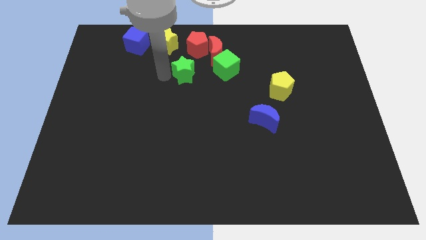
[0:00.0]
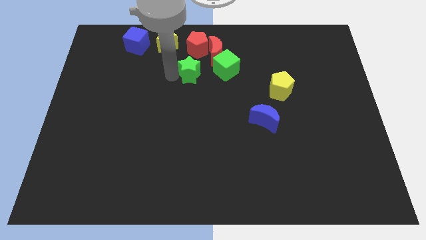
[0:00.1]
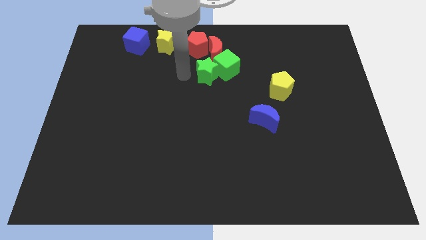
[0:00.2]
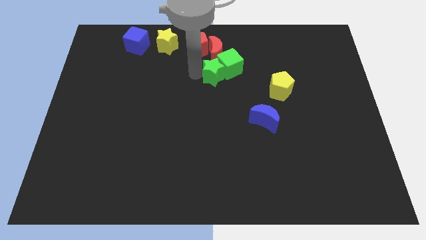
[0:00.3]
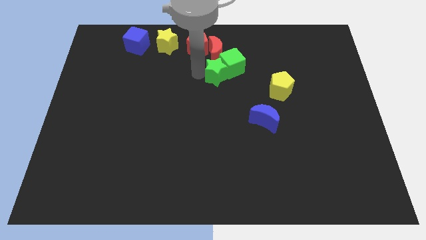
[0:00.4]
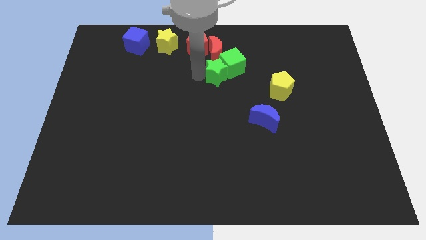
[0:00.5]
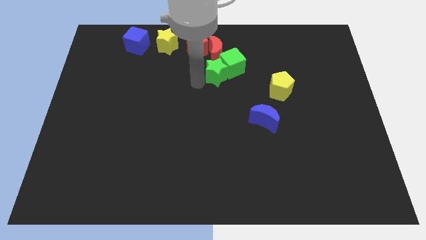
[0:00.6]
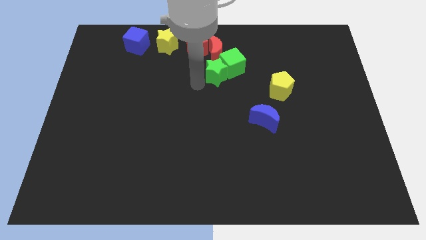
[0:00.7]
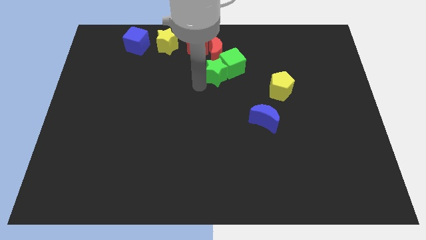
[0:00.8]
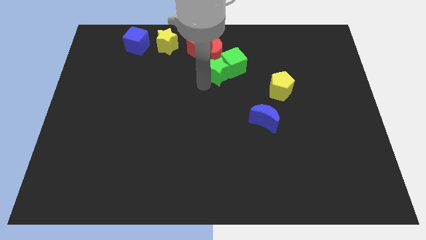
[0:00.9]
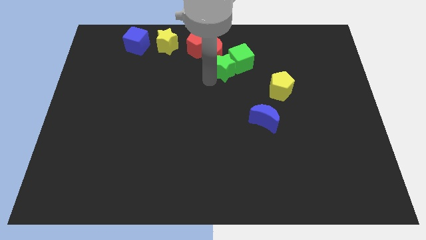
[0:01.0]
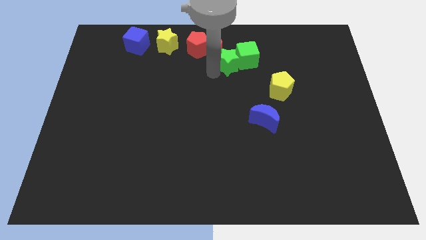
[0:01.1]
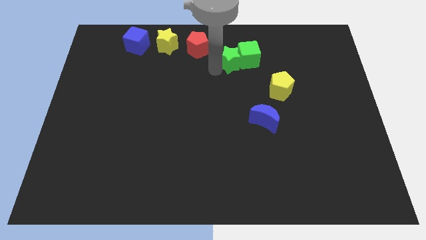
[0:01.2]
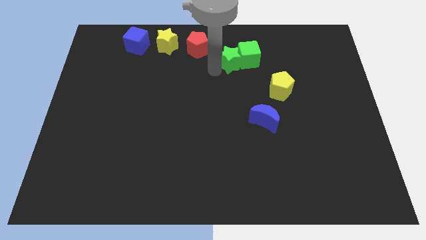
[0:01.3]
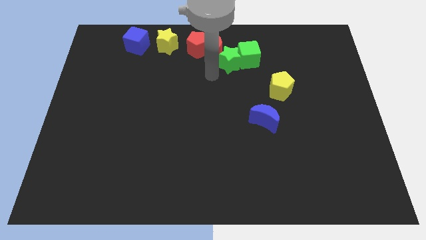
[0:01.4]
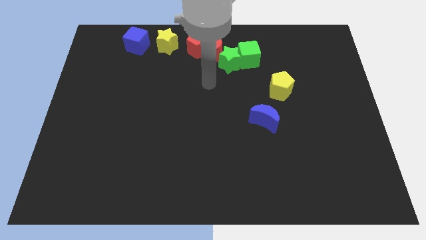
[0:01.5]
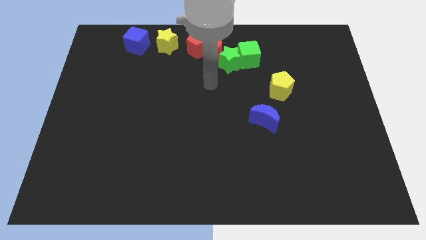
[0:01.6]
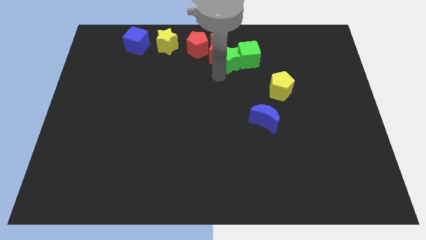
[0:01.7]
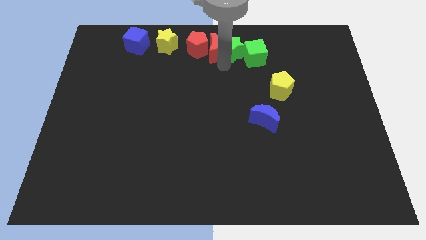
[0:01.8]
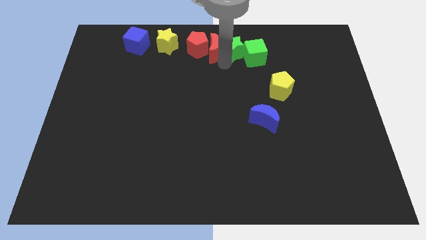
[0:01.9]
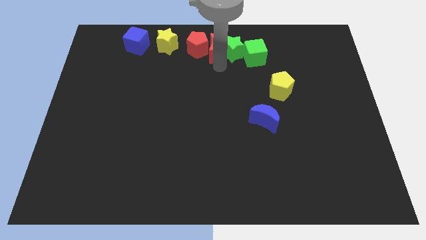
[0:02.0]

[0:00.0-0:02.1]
move green star and green cube to the right side of the red crescent

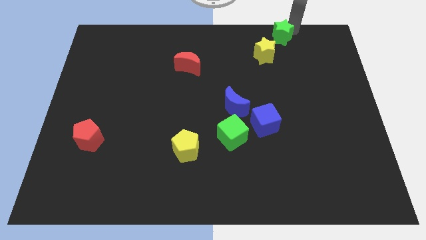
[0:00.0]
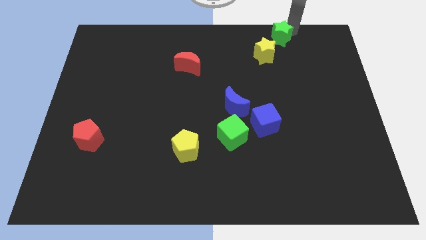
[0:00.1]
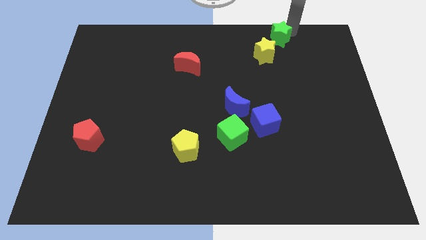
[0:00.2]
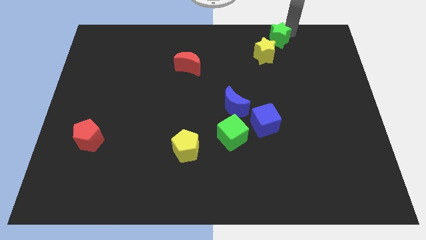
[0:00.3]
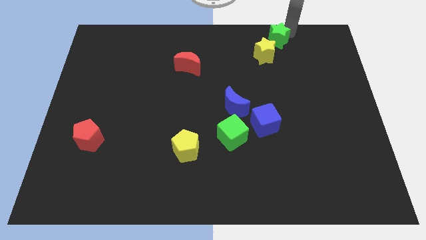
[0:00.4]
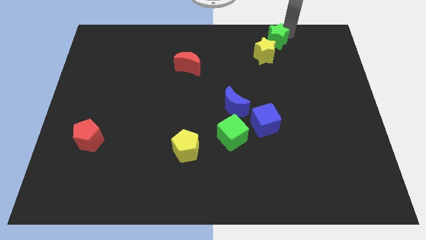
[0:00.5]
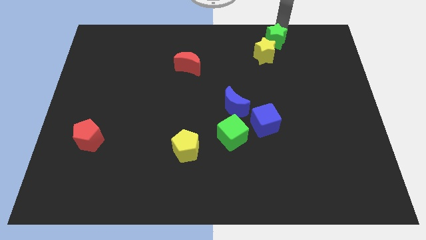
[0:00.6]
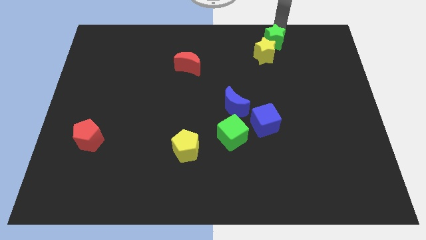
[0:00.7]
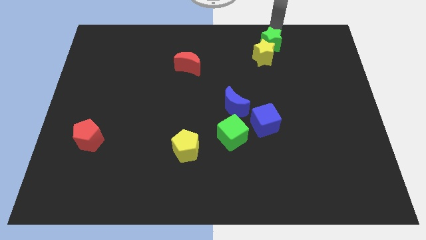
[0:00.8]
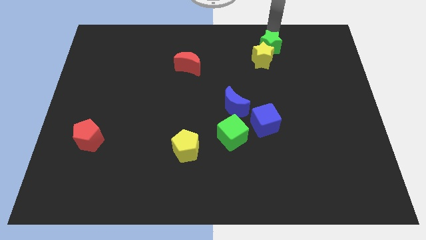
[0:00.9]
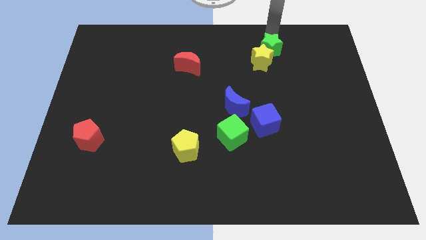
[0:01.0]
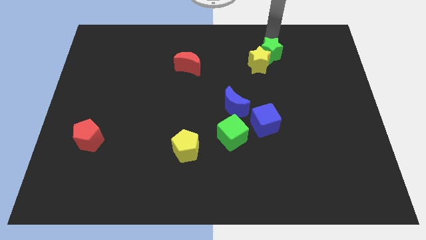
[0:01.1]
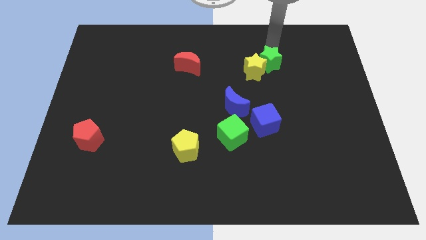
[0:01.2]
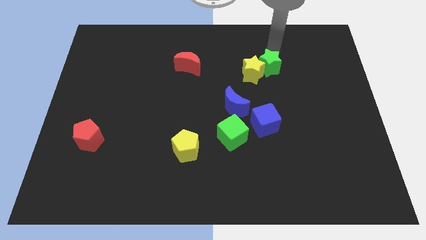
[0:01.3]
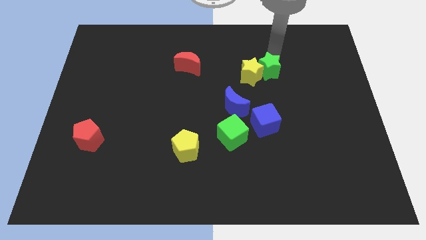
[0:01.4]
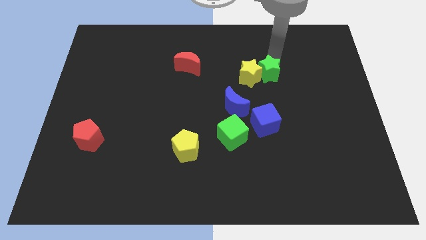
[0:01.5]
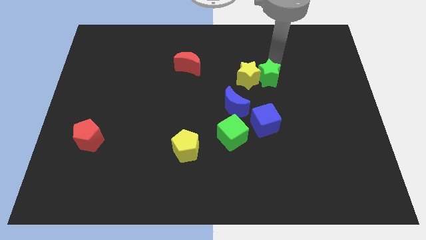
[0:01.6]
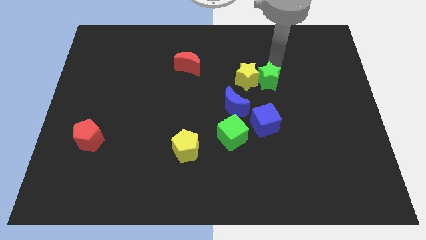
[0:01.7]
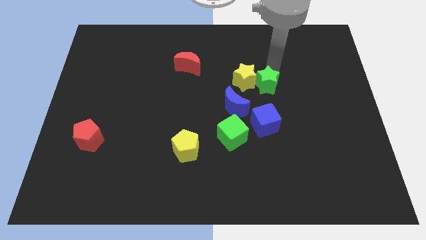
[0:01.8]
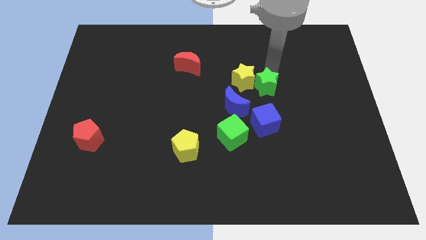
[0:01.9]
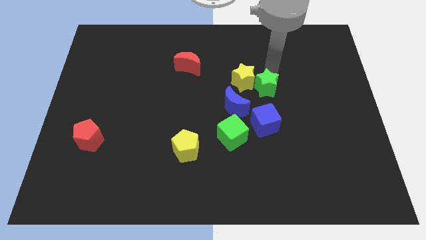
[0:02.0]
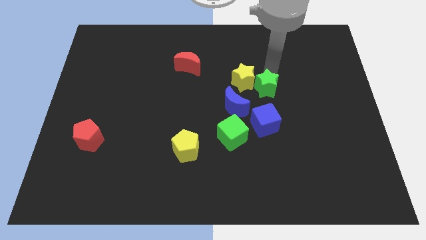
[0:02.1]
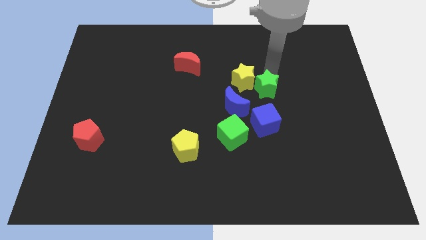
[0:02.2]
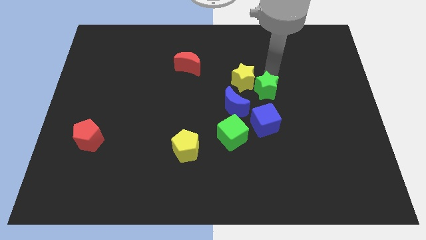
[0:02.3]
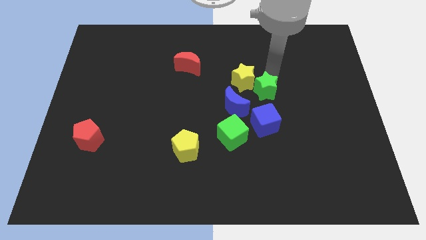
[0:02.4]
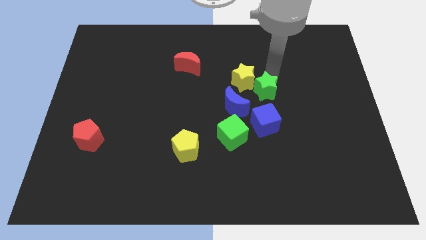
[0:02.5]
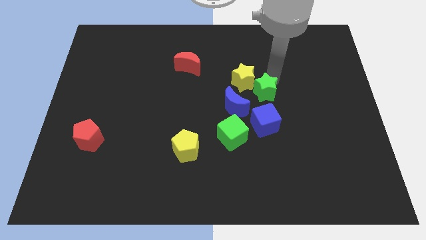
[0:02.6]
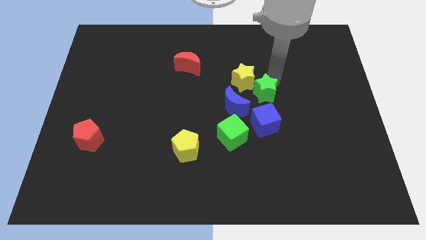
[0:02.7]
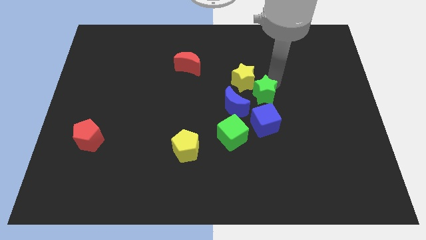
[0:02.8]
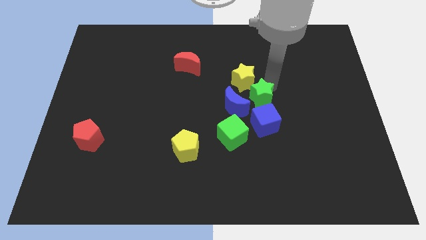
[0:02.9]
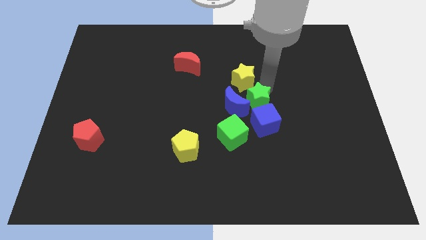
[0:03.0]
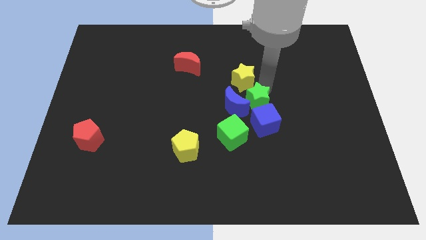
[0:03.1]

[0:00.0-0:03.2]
push green star towards the blue cube

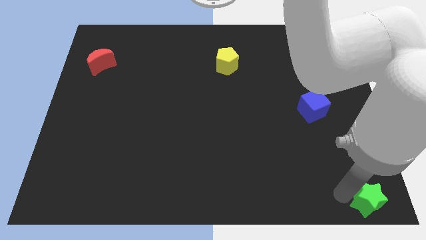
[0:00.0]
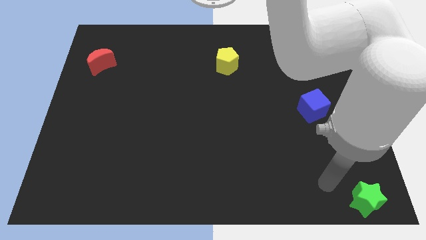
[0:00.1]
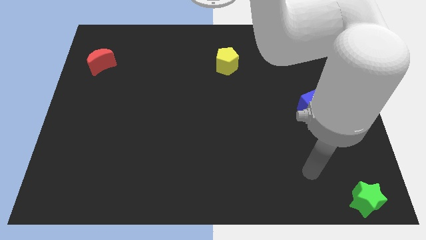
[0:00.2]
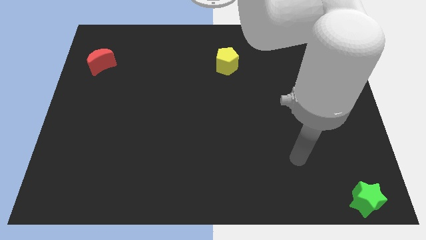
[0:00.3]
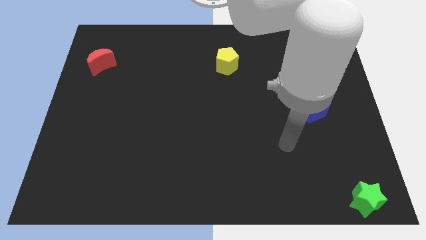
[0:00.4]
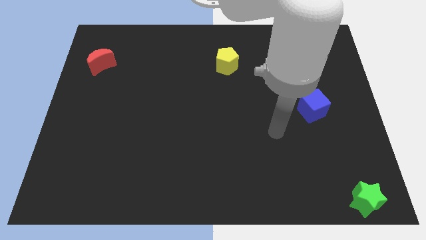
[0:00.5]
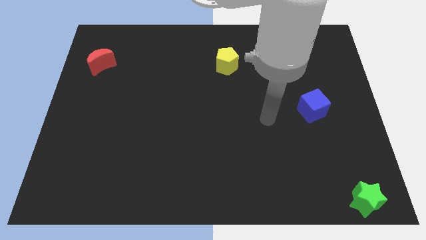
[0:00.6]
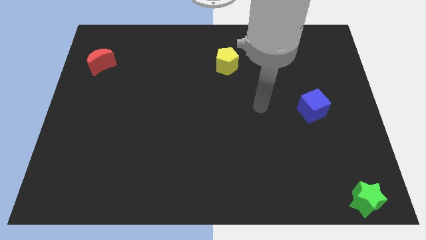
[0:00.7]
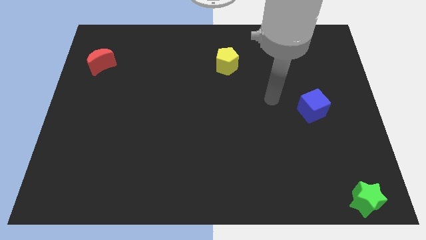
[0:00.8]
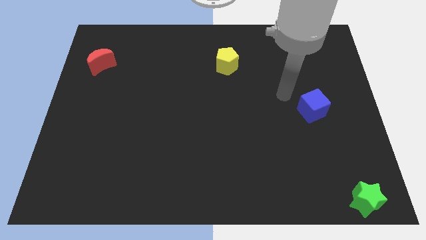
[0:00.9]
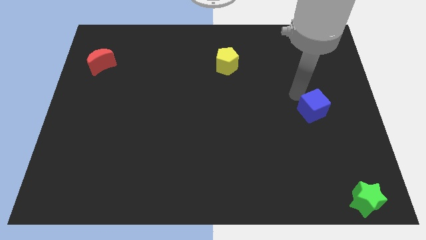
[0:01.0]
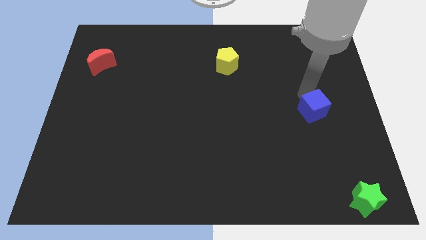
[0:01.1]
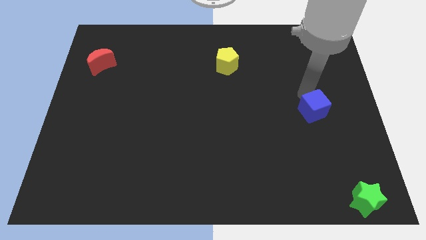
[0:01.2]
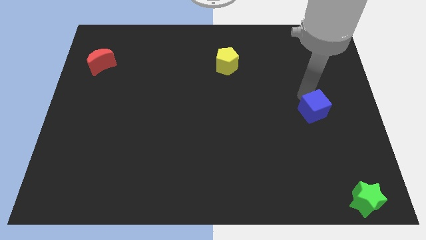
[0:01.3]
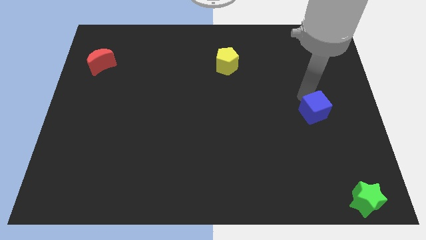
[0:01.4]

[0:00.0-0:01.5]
touch the top side of the blue cube

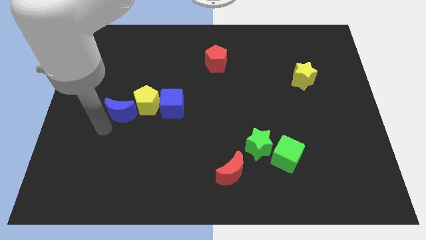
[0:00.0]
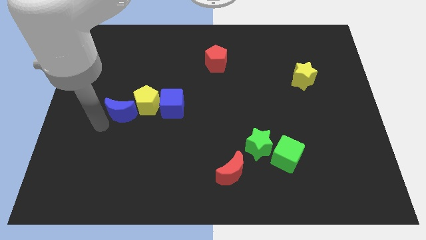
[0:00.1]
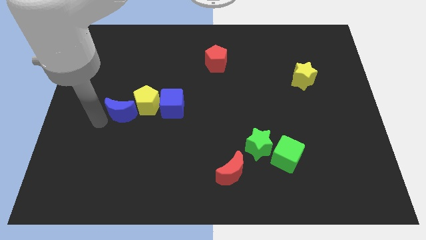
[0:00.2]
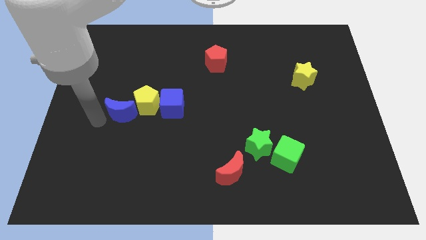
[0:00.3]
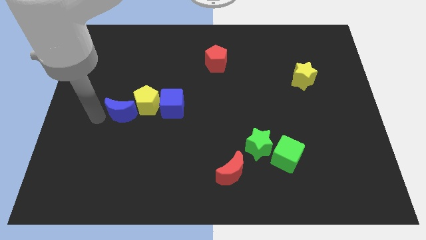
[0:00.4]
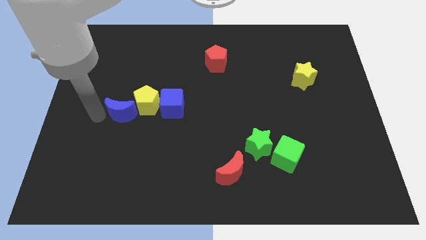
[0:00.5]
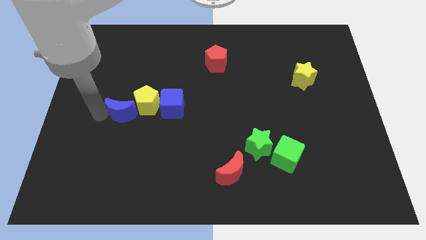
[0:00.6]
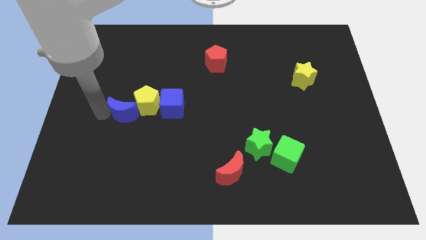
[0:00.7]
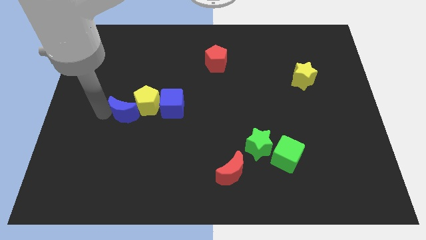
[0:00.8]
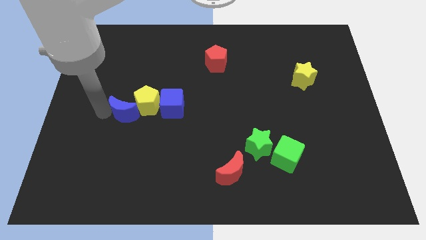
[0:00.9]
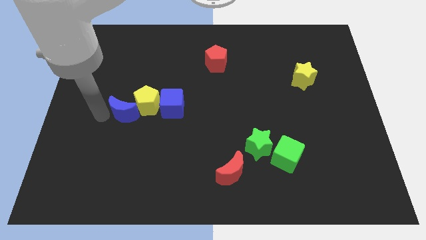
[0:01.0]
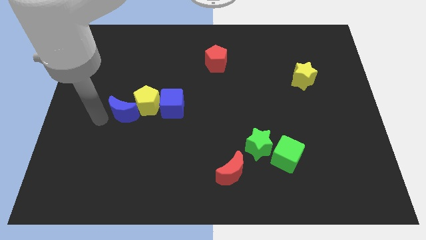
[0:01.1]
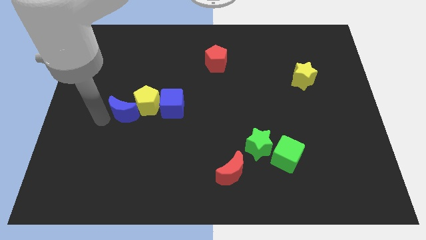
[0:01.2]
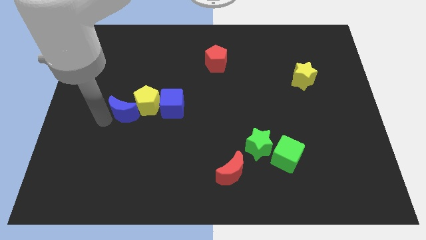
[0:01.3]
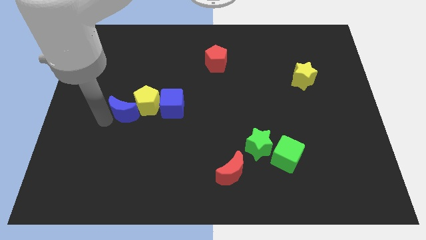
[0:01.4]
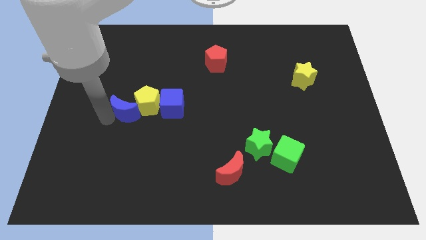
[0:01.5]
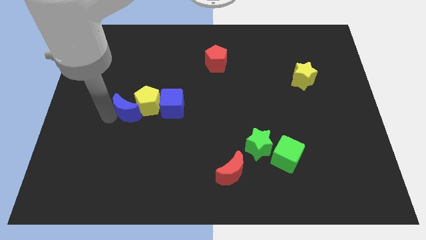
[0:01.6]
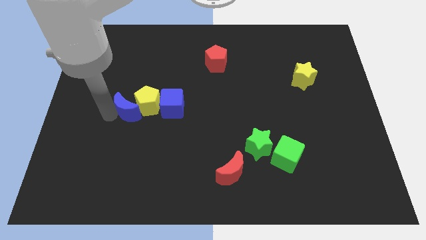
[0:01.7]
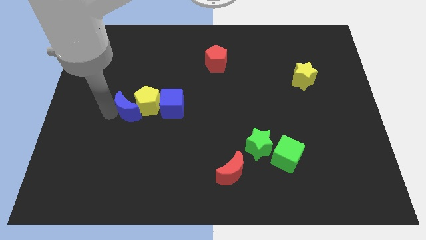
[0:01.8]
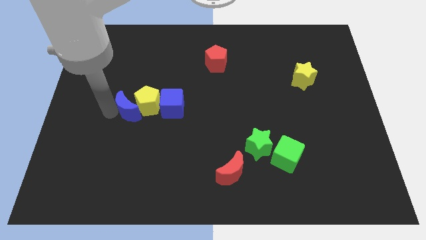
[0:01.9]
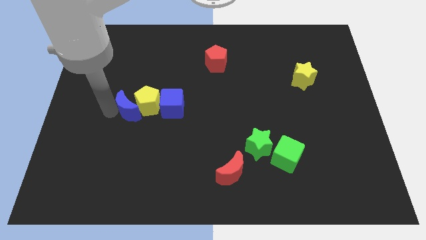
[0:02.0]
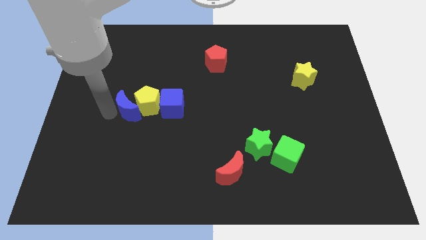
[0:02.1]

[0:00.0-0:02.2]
push the blue crescent slightly right
